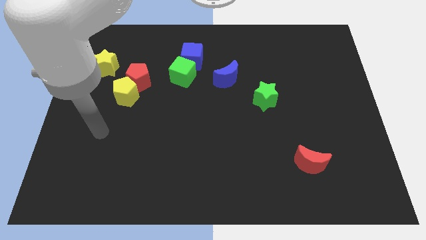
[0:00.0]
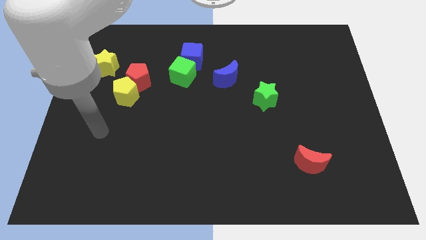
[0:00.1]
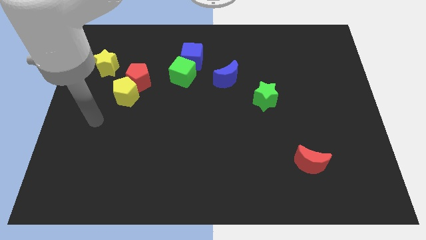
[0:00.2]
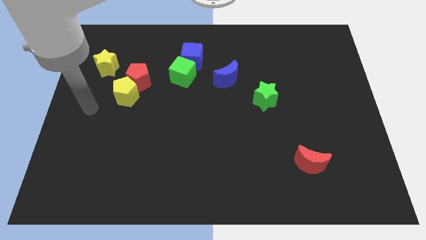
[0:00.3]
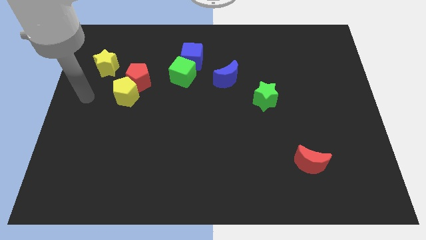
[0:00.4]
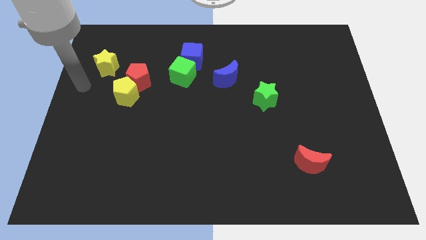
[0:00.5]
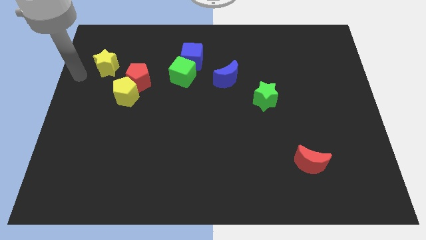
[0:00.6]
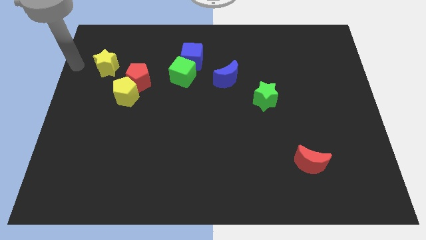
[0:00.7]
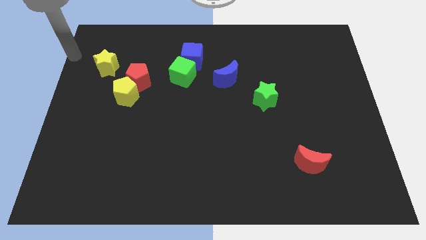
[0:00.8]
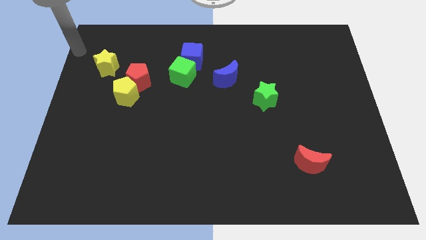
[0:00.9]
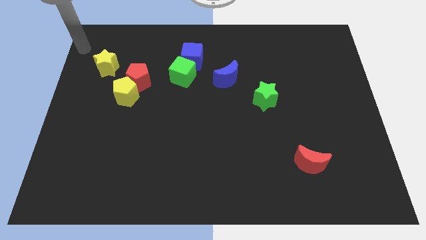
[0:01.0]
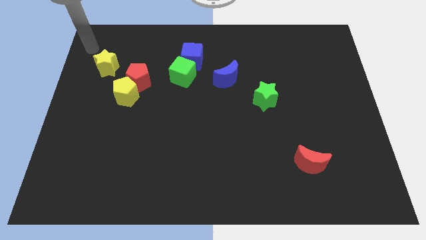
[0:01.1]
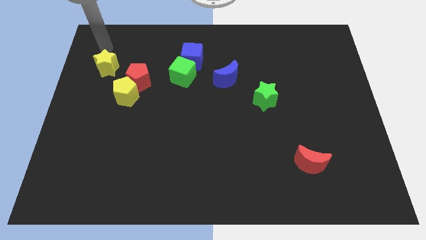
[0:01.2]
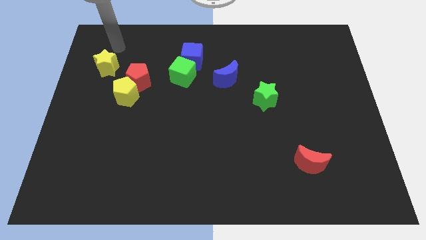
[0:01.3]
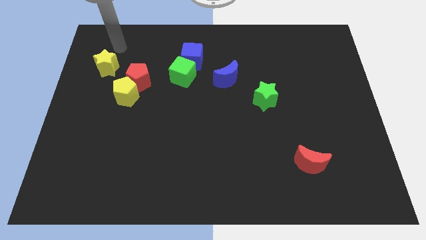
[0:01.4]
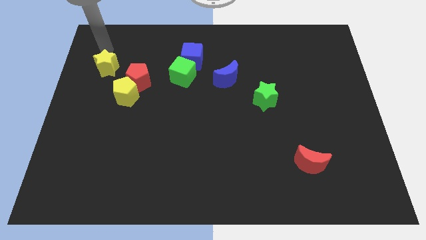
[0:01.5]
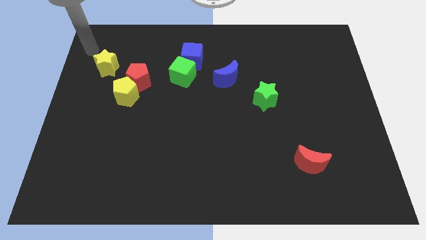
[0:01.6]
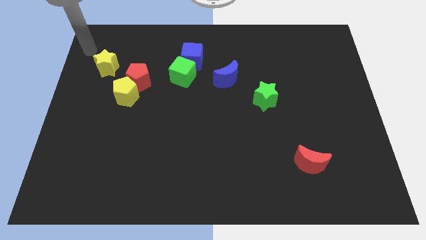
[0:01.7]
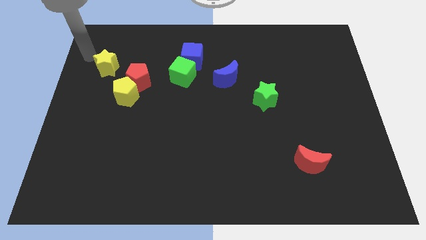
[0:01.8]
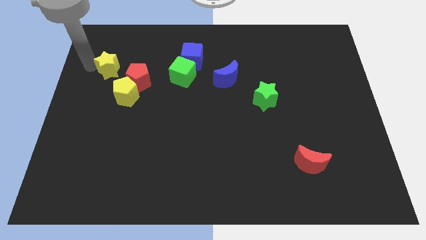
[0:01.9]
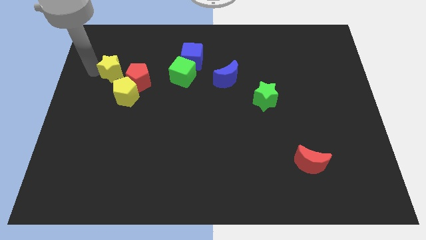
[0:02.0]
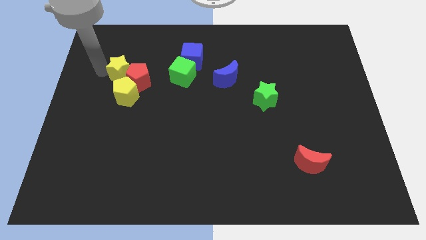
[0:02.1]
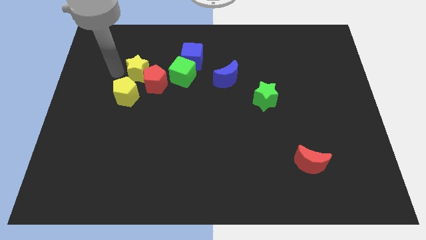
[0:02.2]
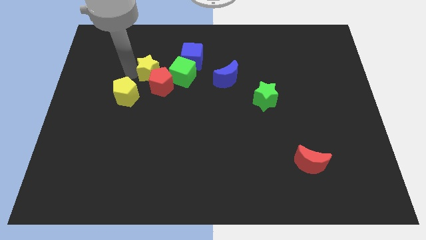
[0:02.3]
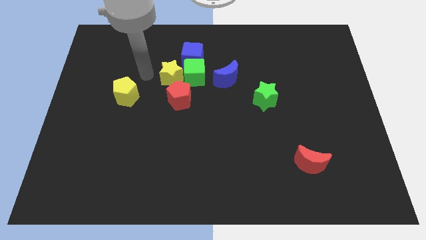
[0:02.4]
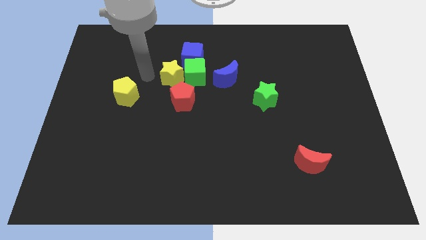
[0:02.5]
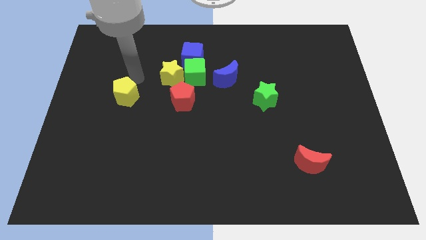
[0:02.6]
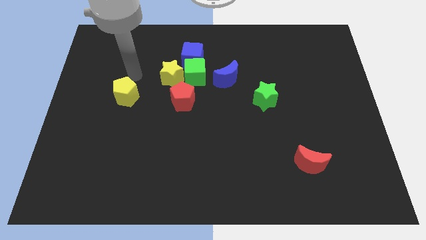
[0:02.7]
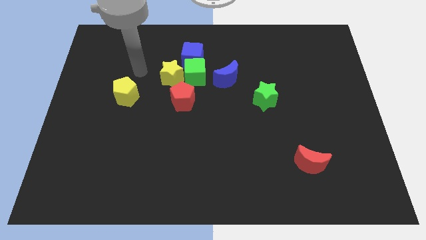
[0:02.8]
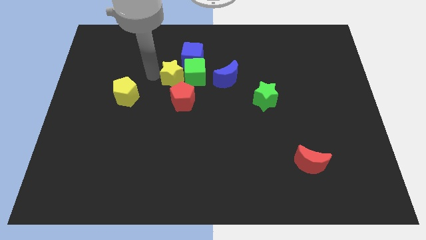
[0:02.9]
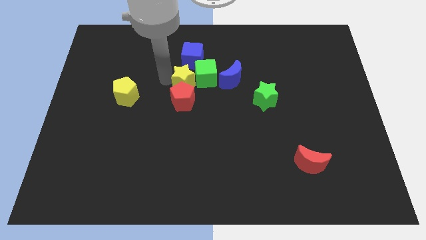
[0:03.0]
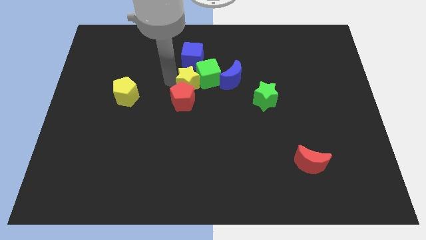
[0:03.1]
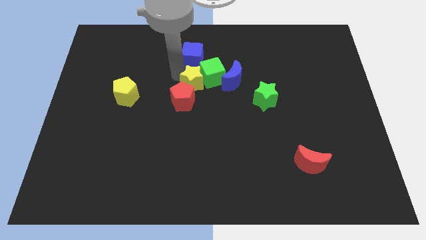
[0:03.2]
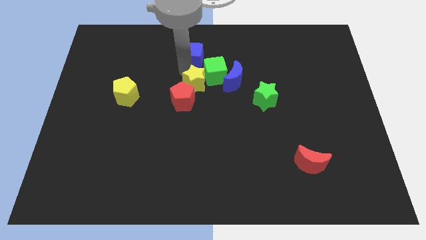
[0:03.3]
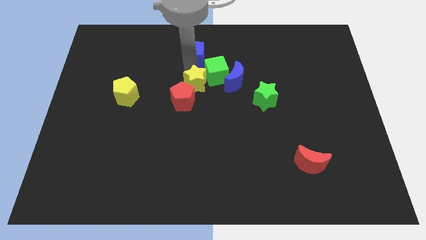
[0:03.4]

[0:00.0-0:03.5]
push the yellow star into the green cube

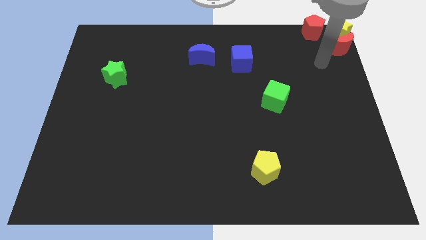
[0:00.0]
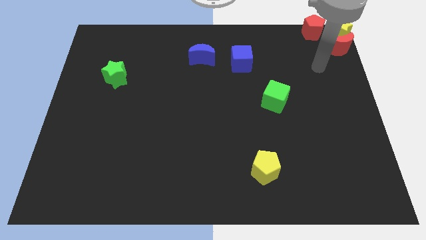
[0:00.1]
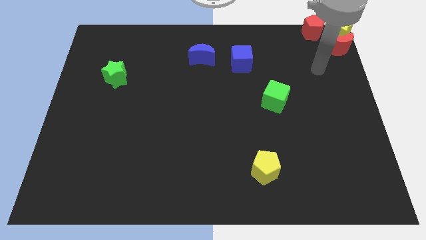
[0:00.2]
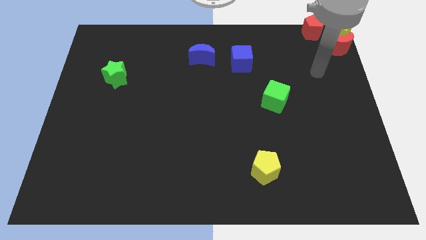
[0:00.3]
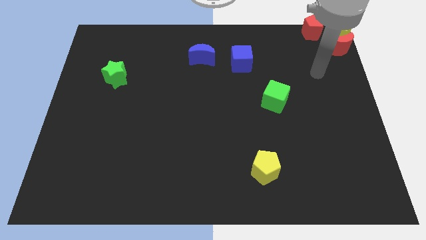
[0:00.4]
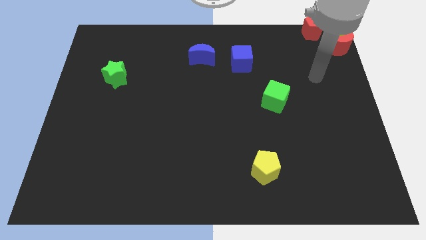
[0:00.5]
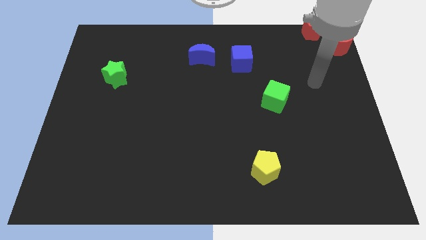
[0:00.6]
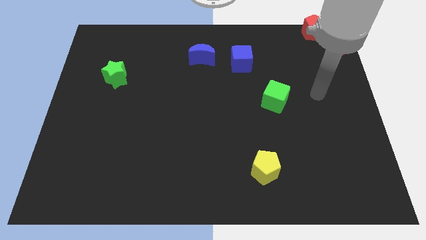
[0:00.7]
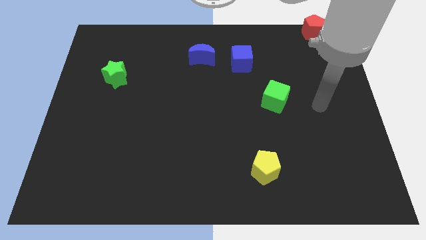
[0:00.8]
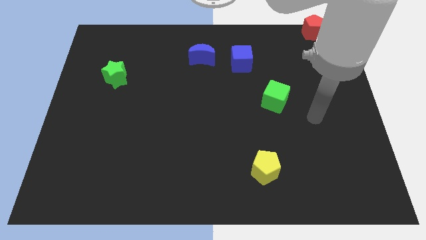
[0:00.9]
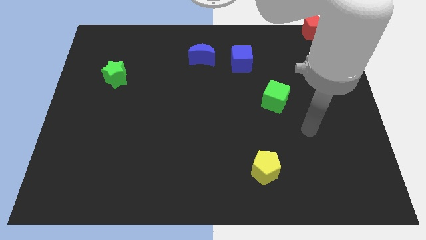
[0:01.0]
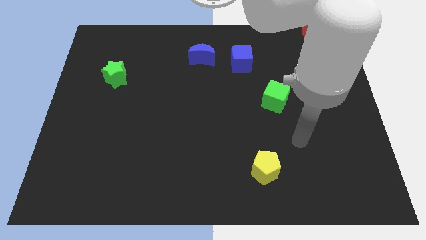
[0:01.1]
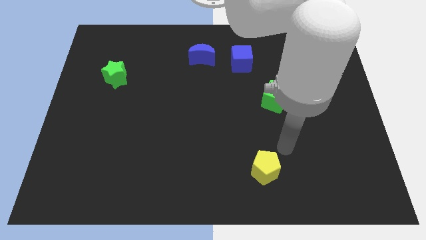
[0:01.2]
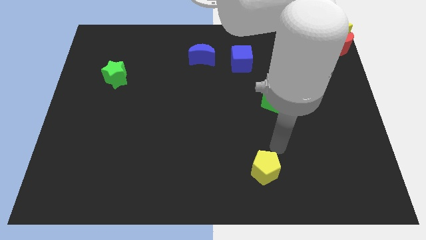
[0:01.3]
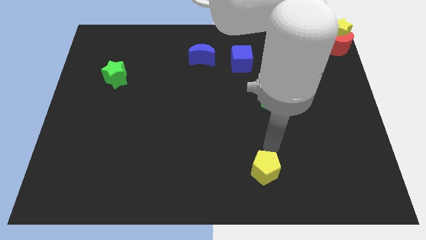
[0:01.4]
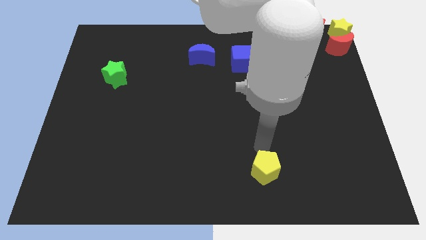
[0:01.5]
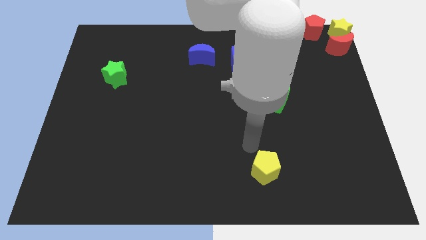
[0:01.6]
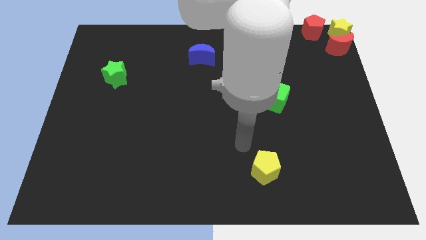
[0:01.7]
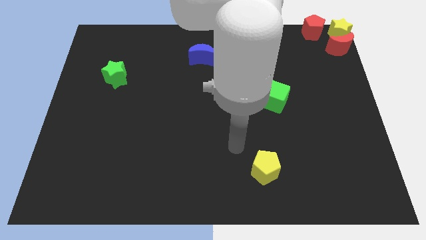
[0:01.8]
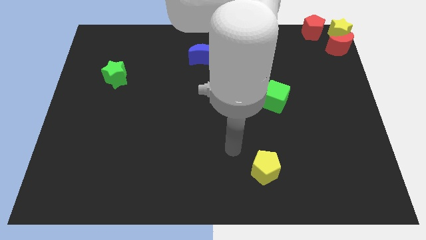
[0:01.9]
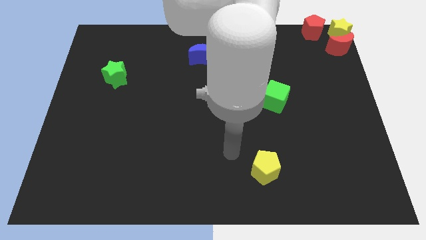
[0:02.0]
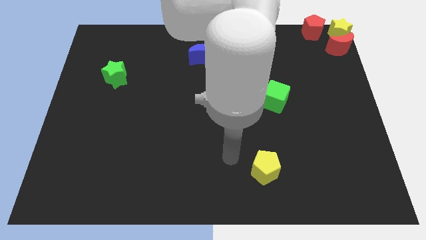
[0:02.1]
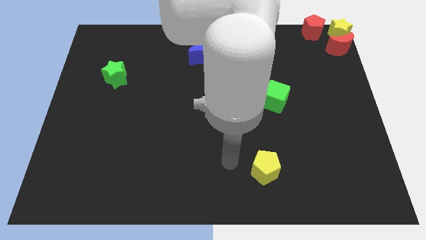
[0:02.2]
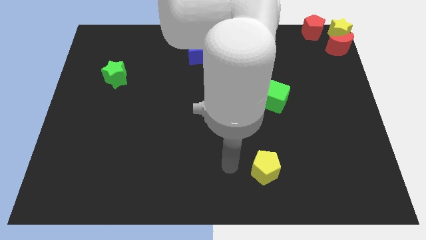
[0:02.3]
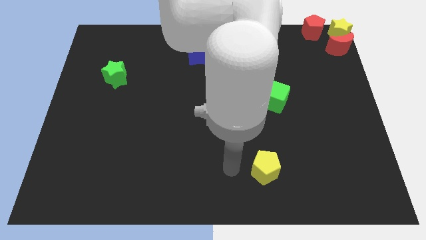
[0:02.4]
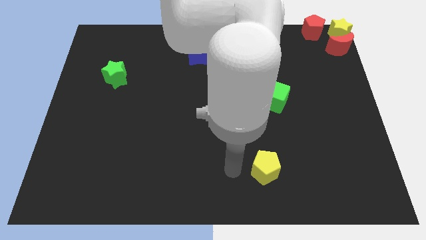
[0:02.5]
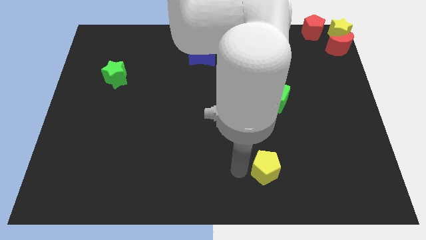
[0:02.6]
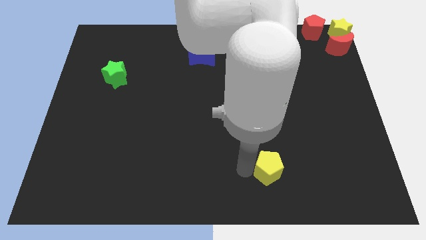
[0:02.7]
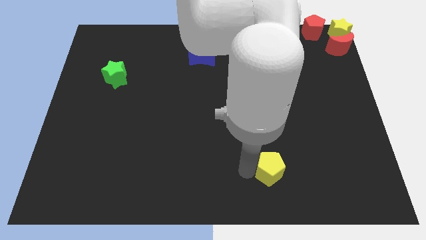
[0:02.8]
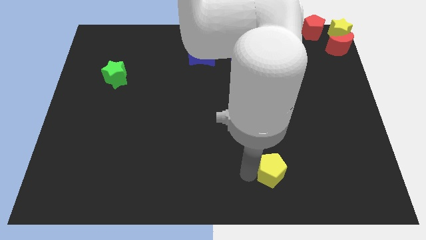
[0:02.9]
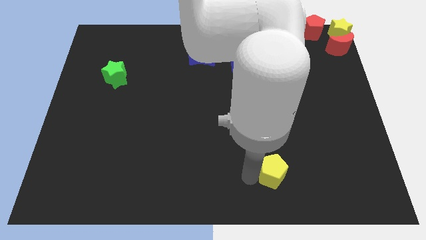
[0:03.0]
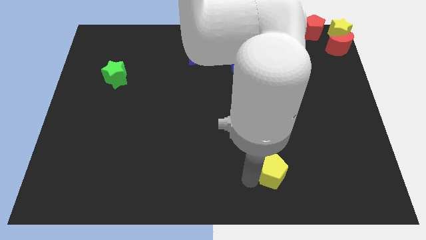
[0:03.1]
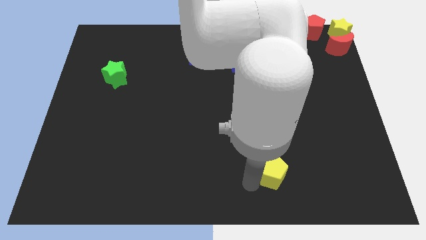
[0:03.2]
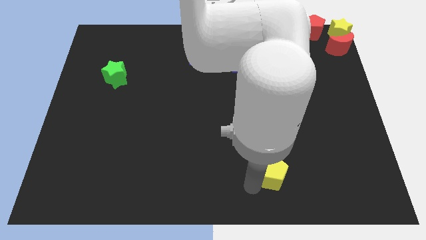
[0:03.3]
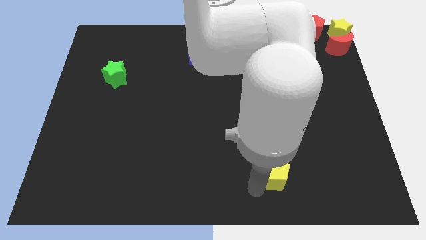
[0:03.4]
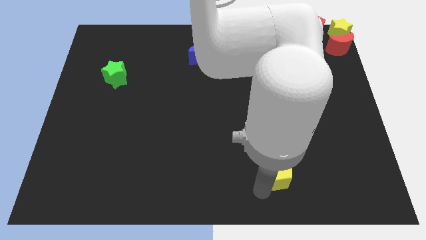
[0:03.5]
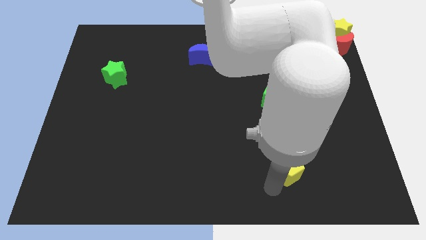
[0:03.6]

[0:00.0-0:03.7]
slide the yellow pentagon slightly to the right side of the board

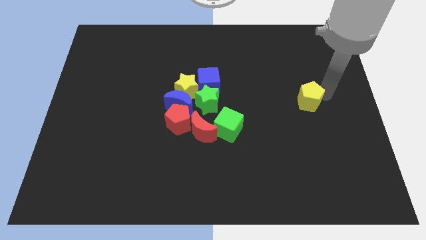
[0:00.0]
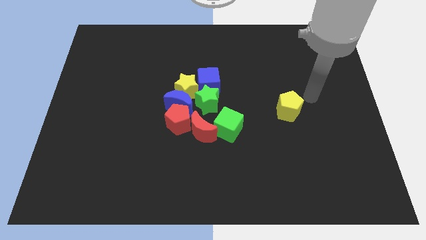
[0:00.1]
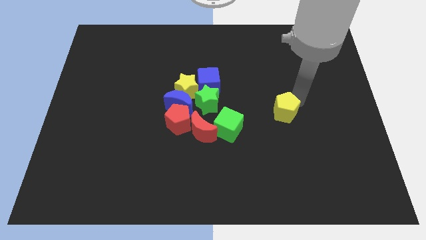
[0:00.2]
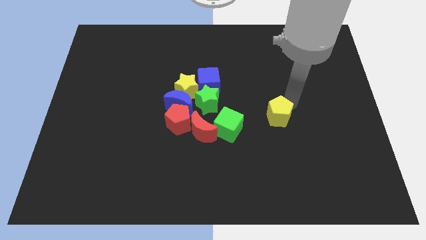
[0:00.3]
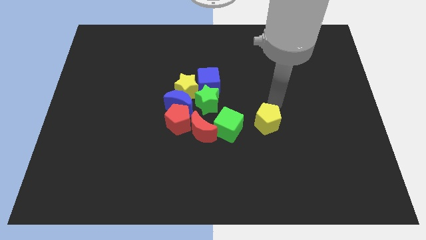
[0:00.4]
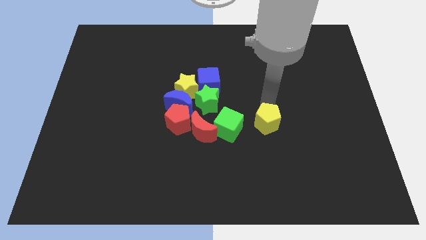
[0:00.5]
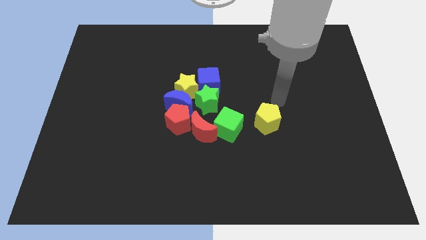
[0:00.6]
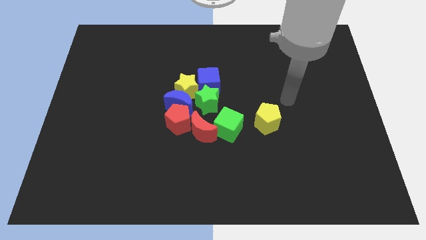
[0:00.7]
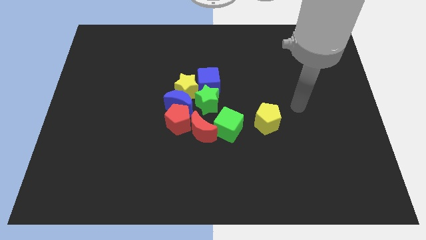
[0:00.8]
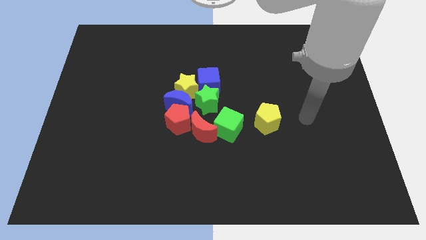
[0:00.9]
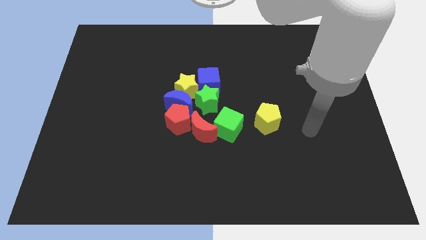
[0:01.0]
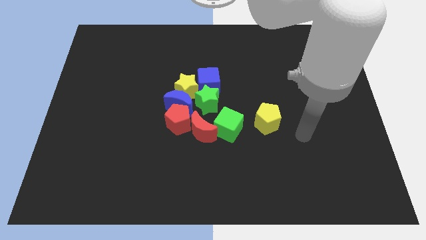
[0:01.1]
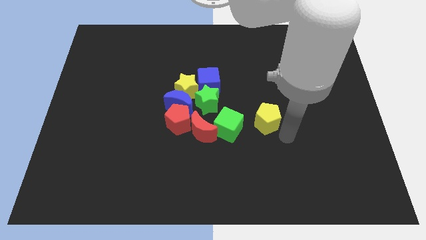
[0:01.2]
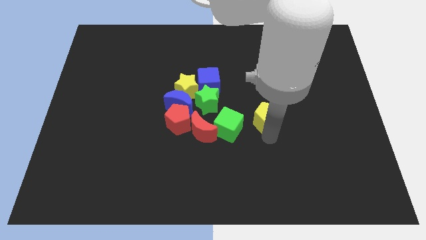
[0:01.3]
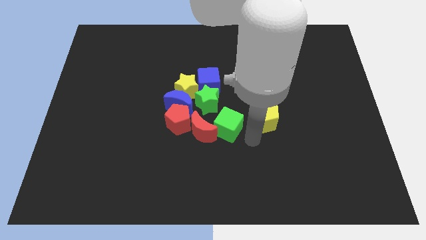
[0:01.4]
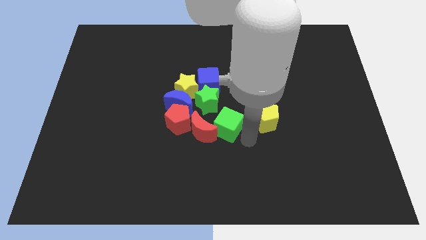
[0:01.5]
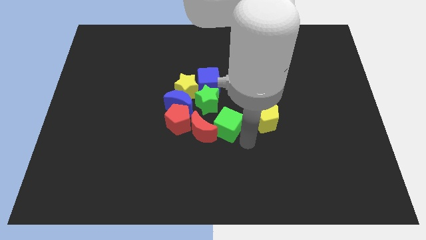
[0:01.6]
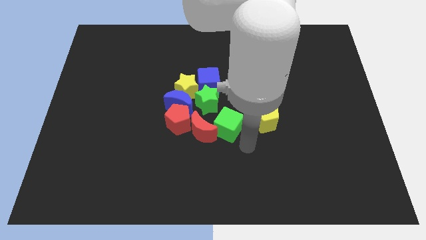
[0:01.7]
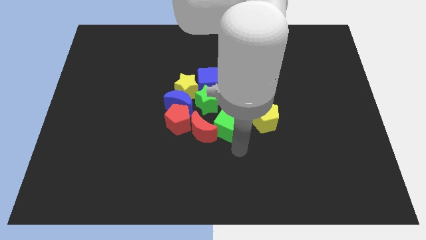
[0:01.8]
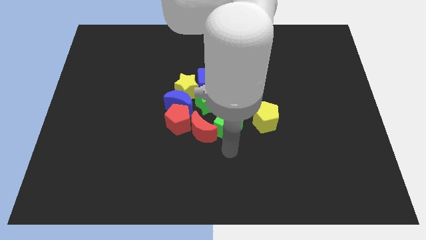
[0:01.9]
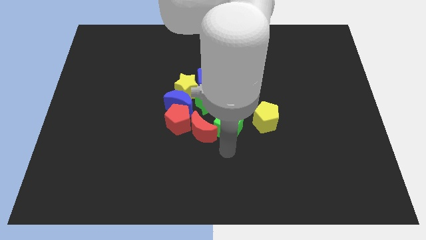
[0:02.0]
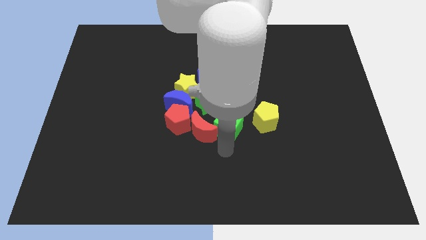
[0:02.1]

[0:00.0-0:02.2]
place yellow pentagon opposite to green cube
